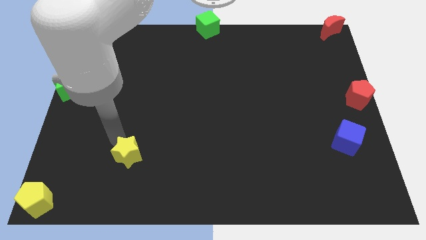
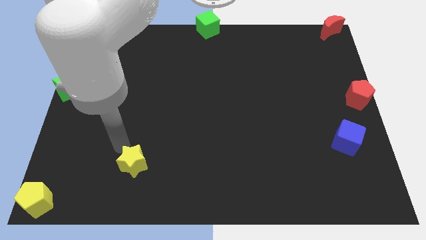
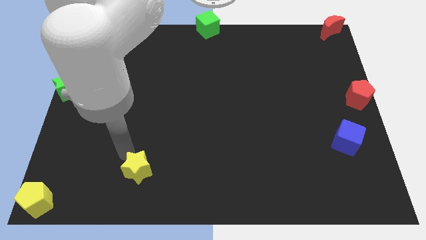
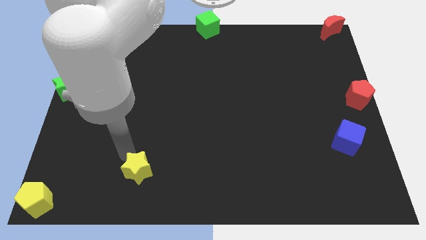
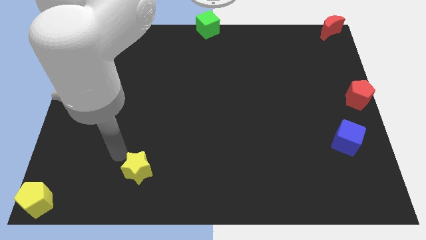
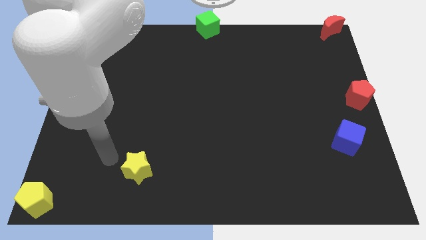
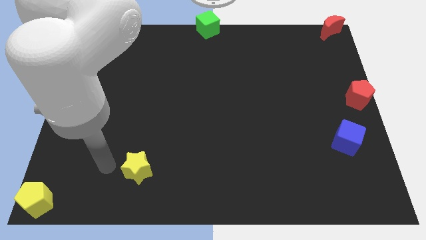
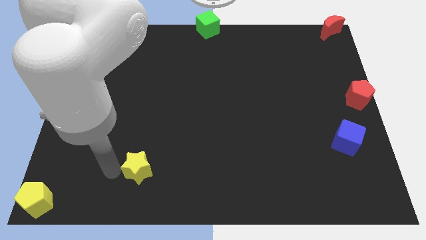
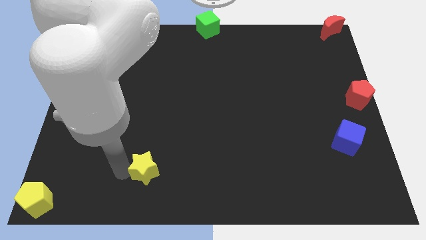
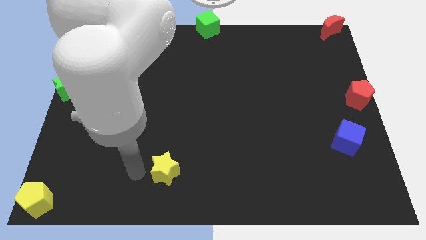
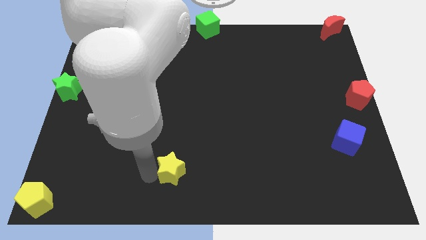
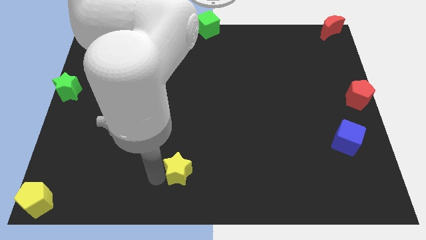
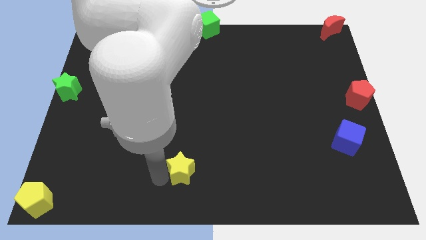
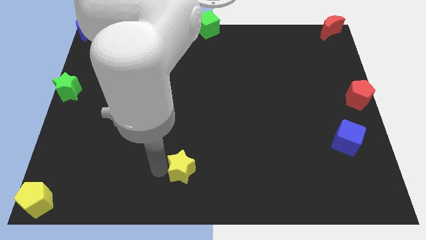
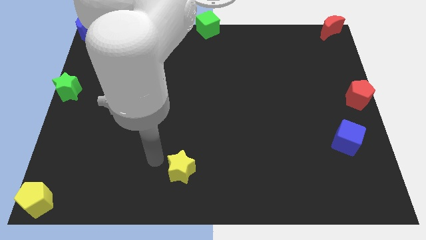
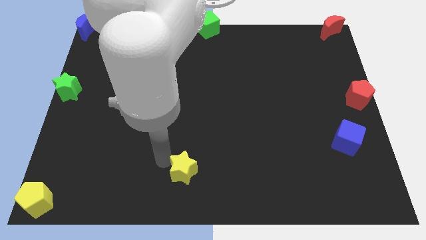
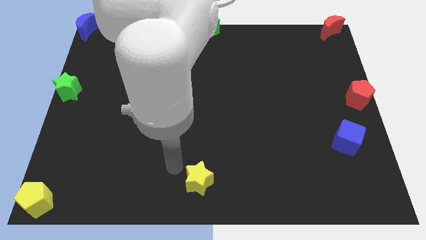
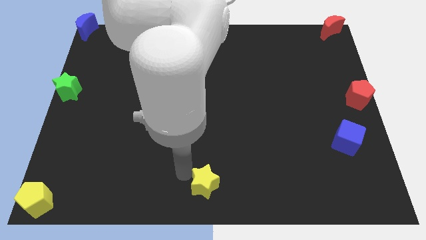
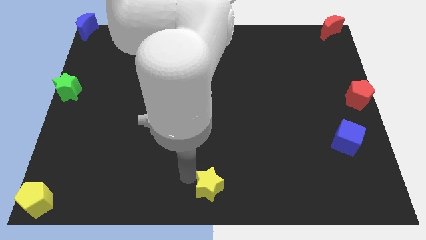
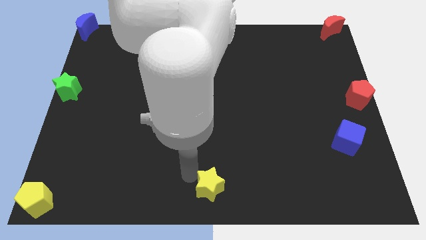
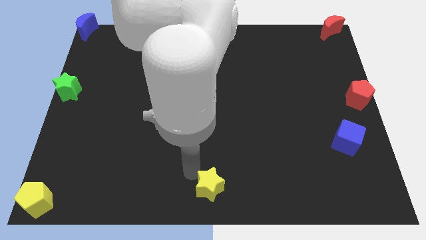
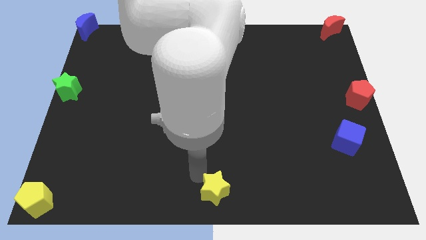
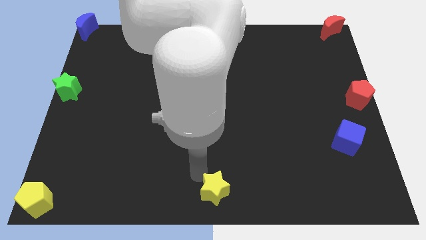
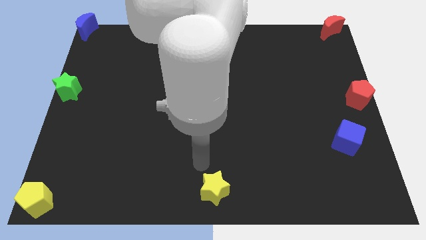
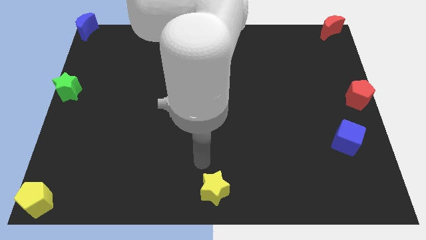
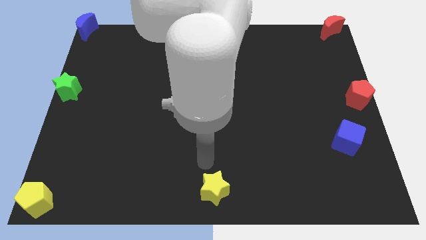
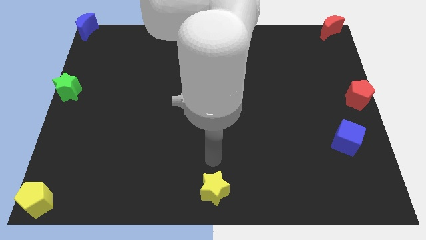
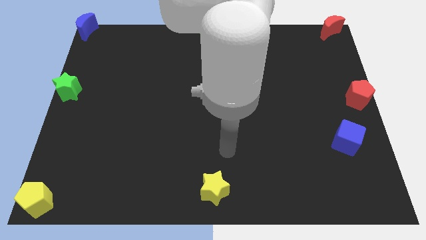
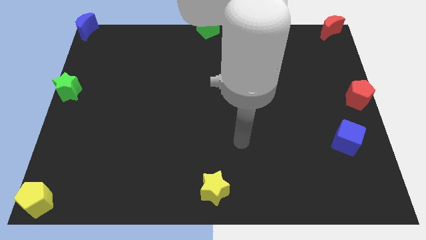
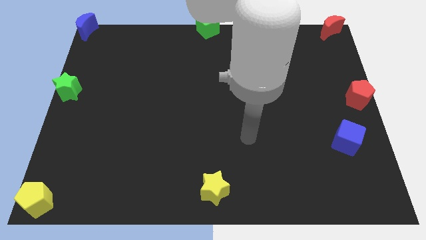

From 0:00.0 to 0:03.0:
move the yellow star to bottom center of the board

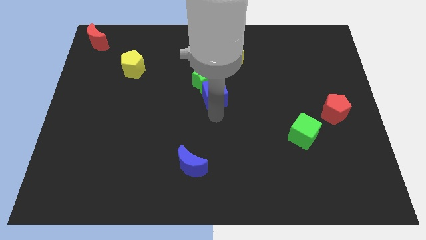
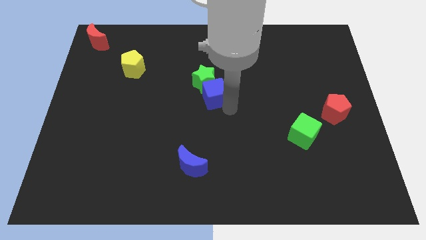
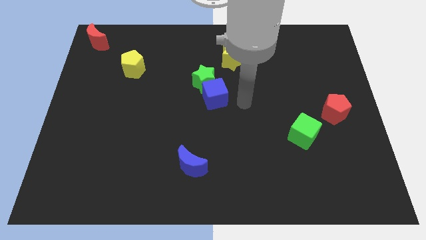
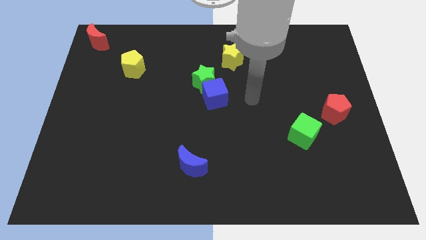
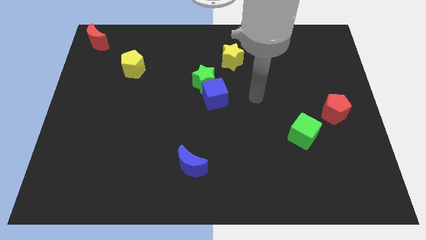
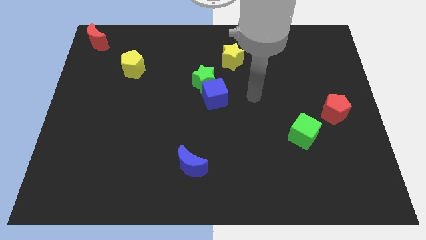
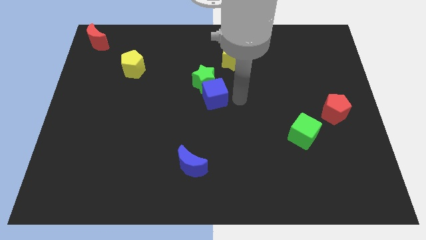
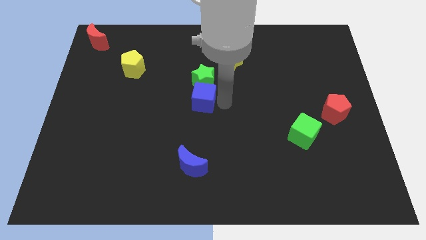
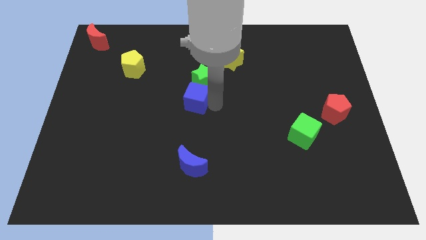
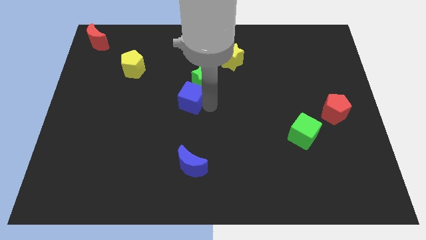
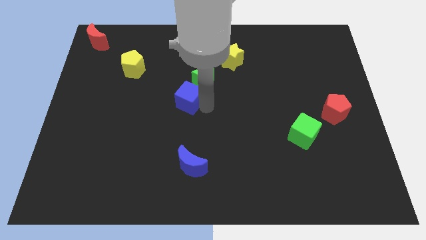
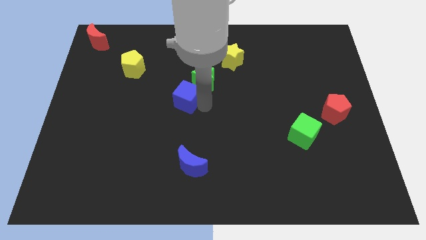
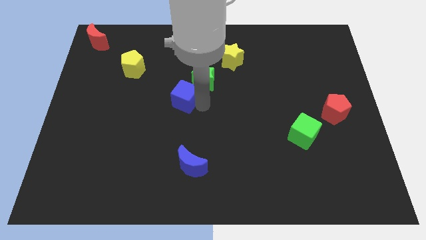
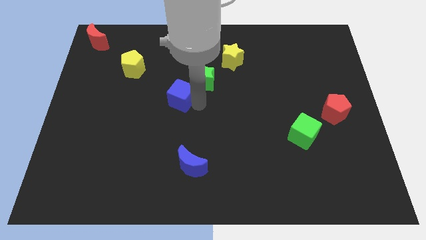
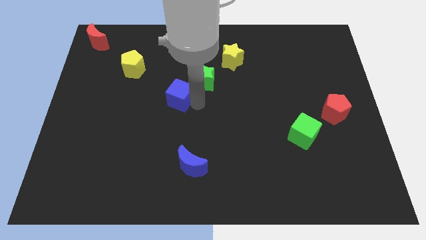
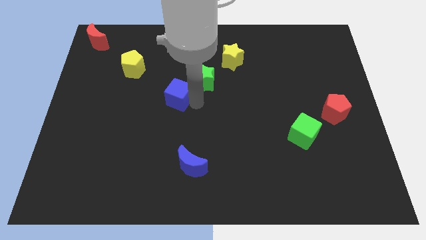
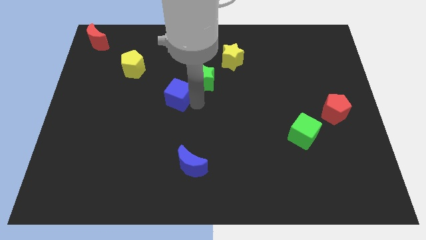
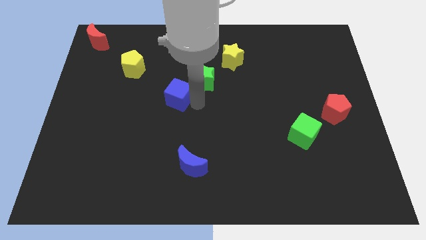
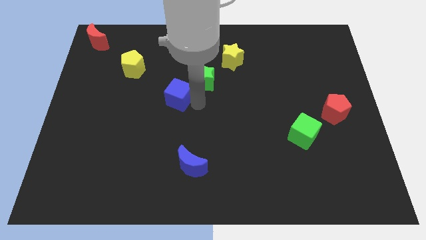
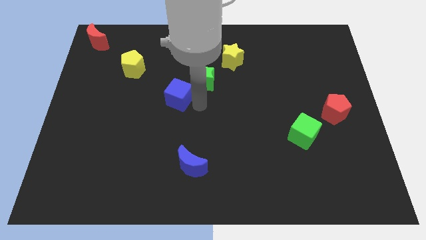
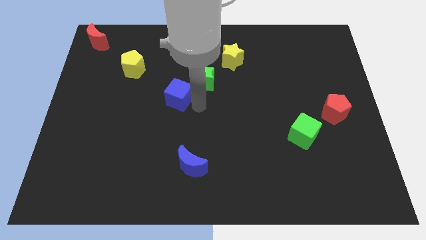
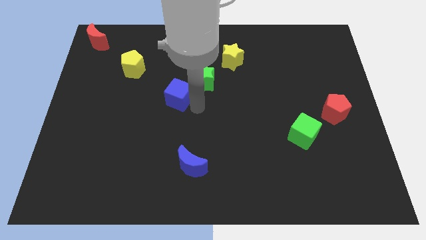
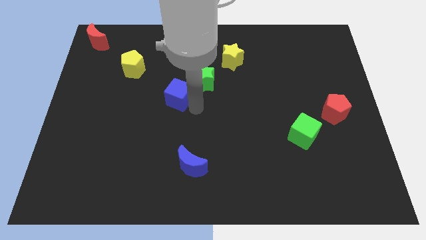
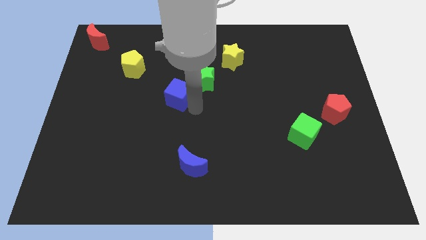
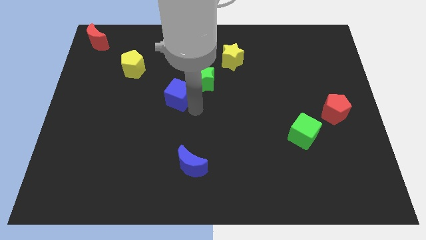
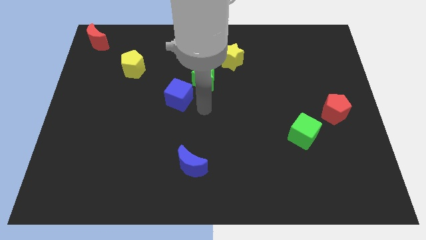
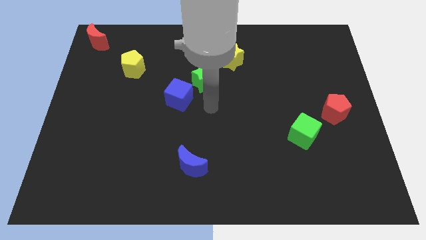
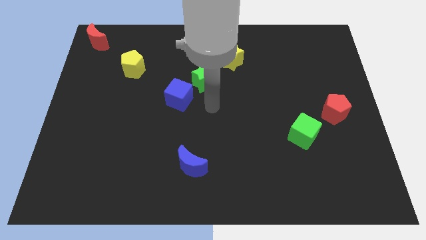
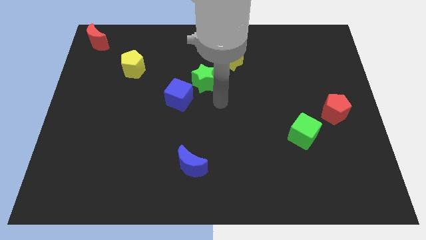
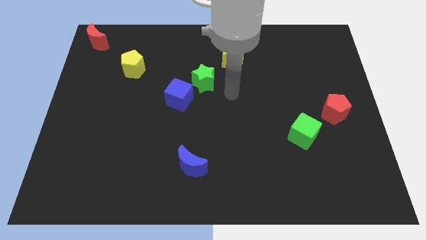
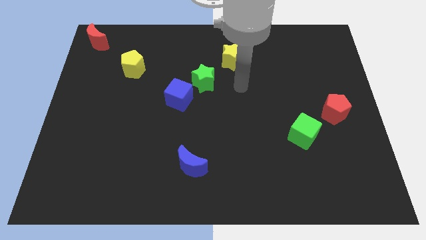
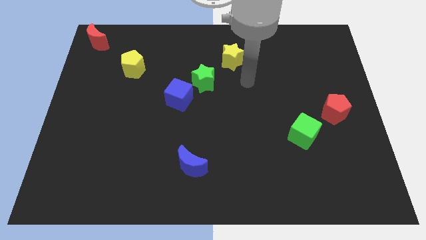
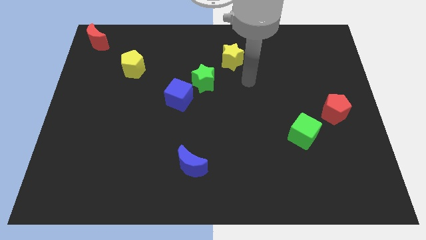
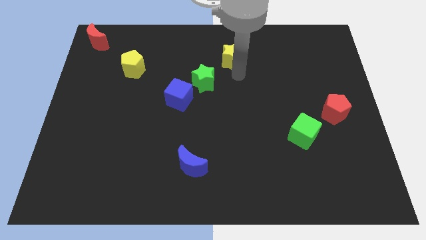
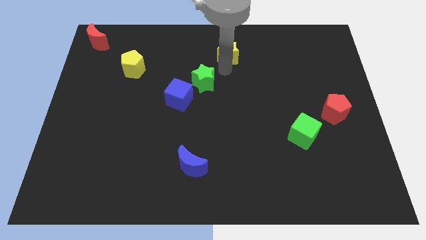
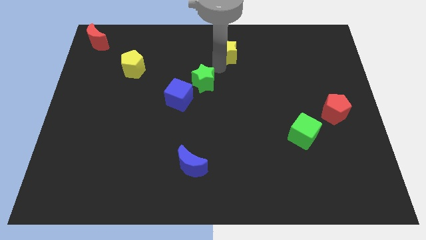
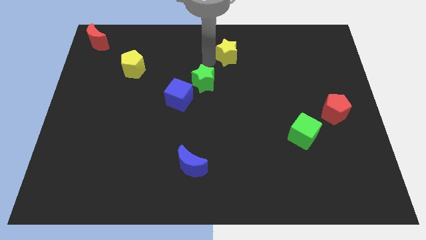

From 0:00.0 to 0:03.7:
drag the blue cube below the yellow pentagon

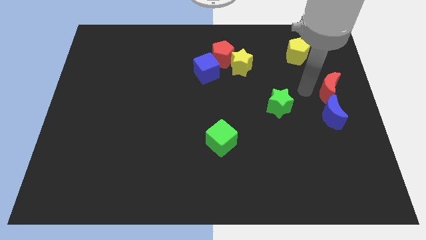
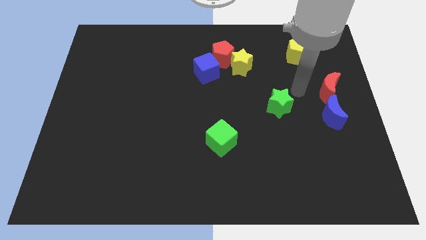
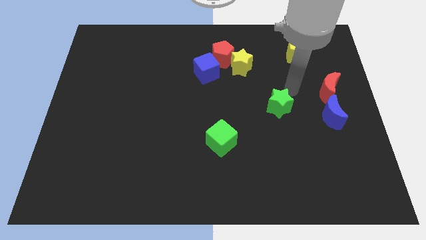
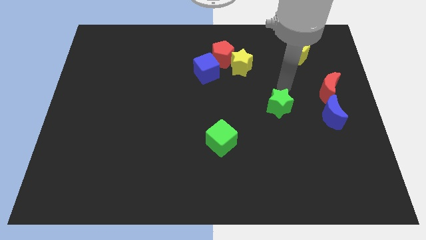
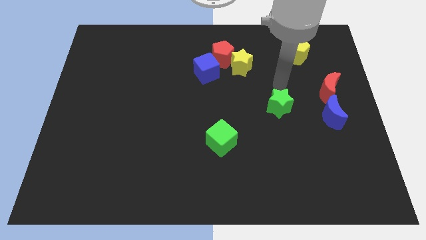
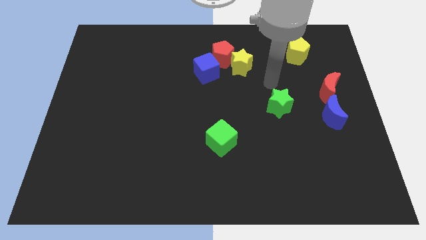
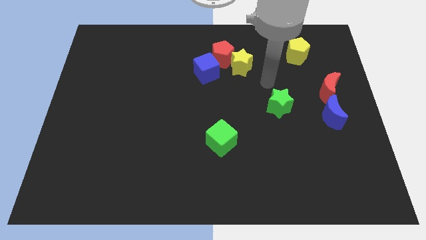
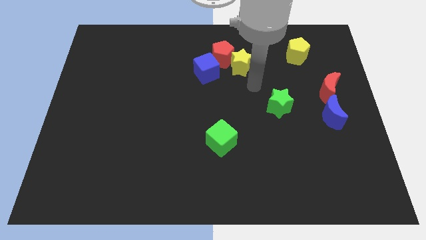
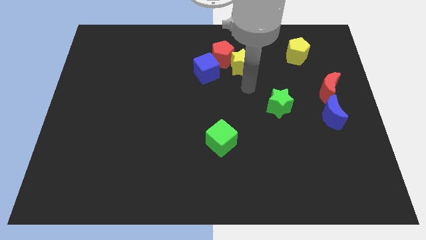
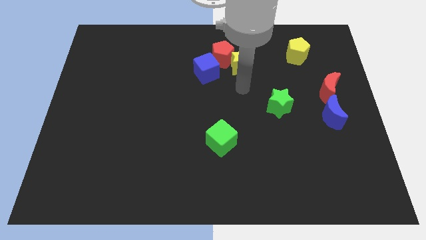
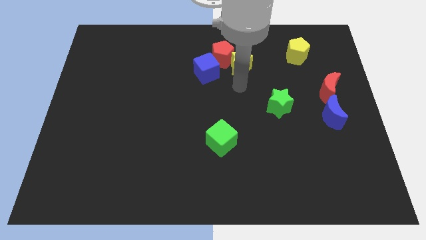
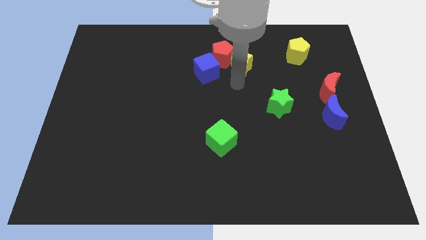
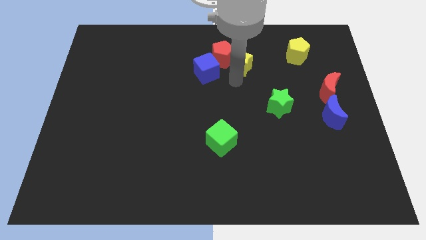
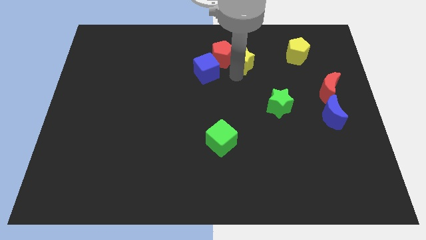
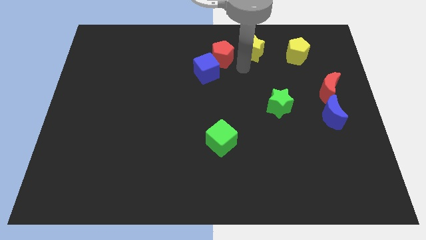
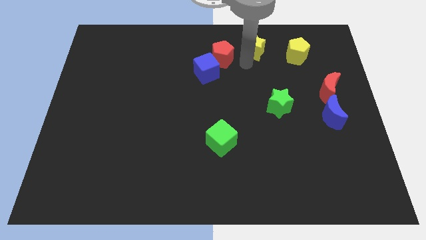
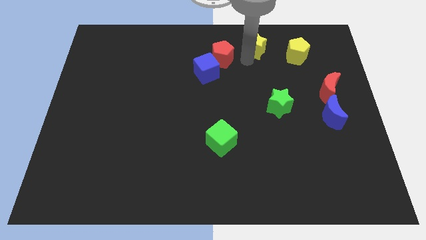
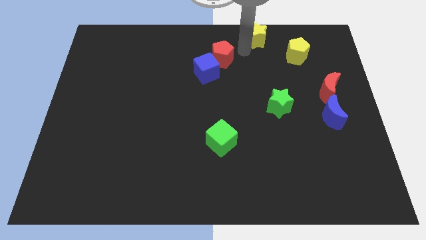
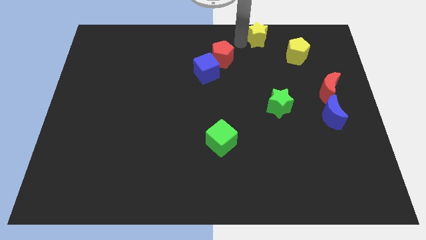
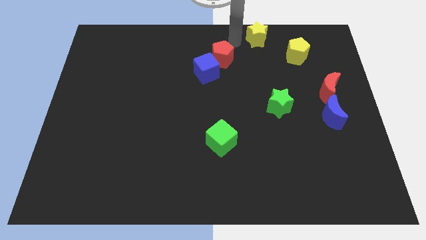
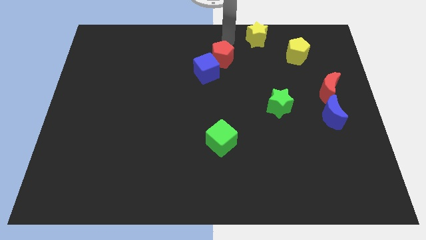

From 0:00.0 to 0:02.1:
put the yellow star diagonally top right to the red pentagon
